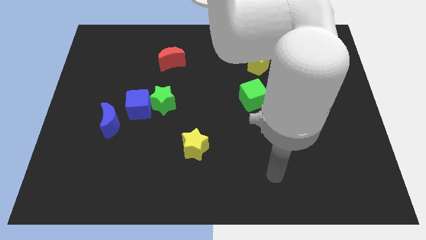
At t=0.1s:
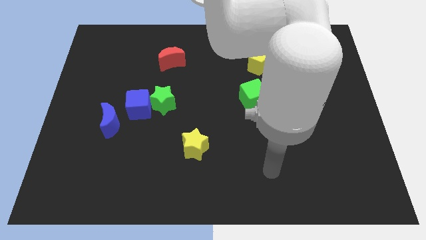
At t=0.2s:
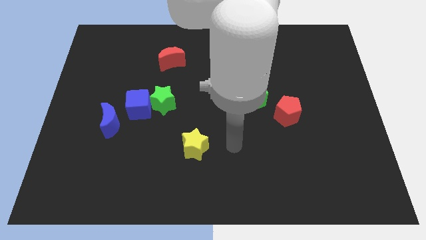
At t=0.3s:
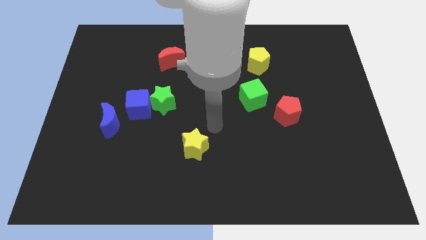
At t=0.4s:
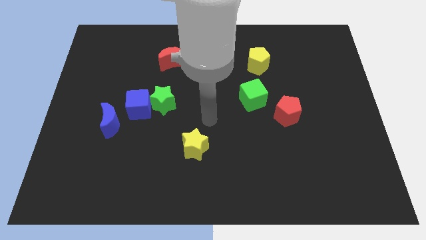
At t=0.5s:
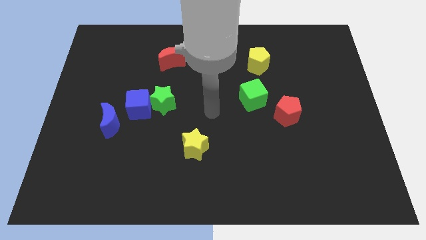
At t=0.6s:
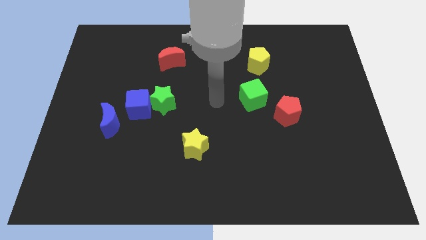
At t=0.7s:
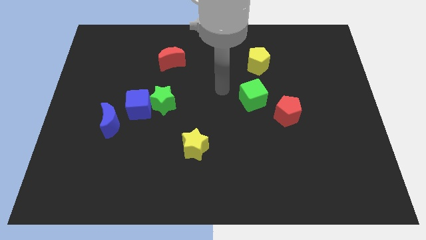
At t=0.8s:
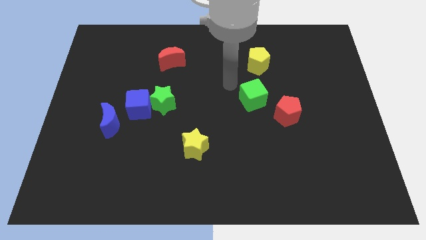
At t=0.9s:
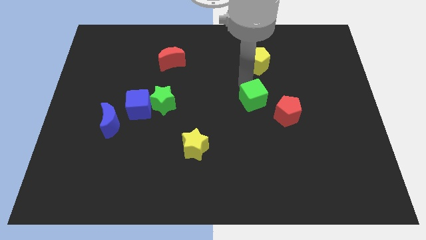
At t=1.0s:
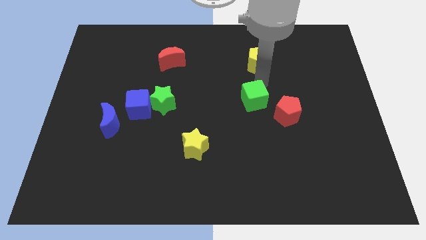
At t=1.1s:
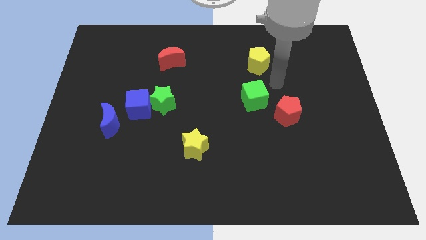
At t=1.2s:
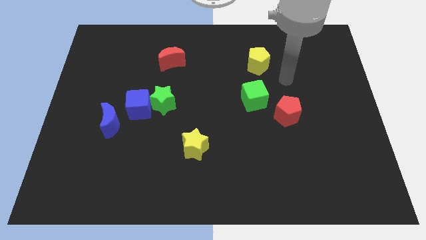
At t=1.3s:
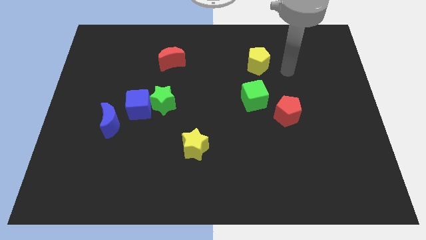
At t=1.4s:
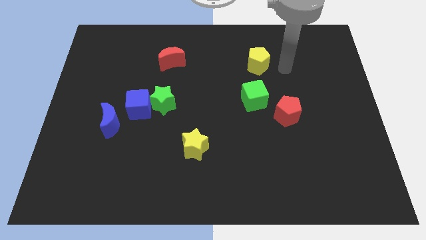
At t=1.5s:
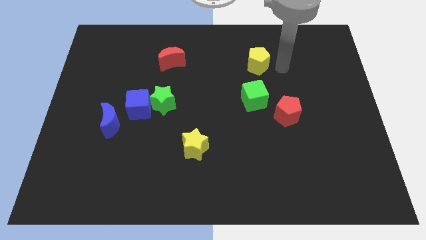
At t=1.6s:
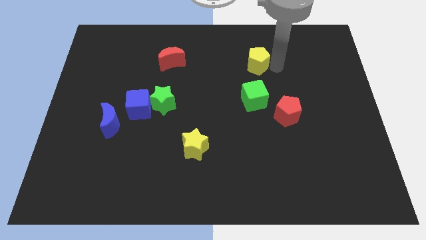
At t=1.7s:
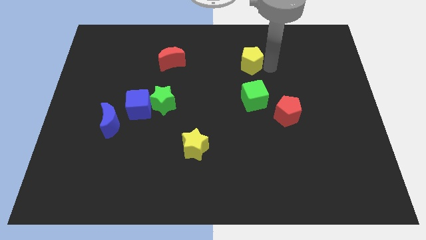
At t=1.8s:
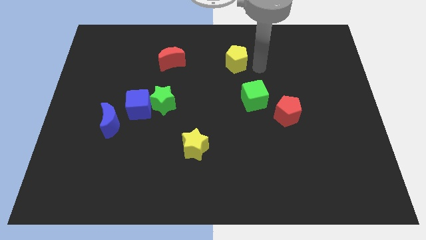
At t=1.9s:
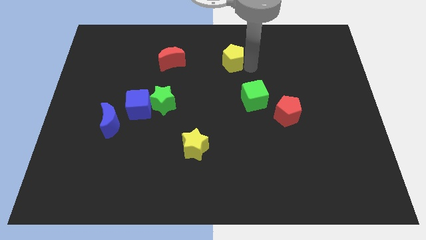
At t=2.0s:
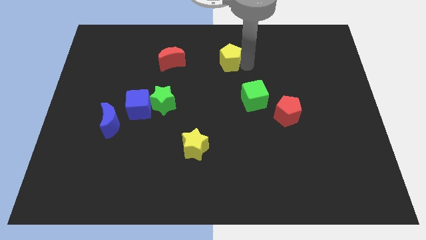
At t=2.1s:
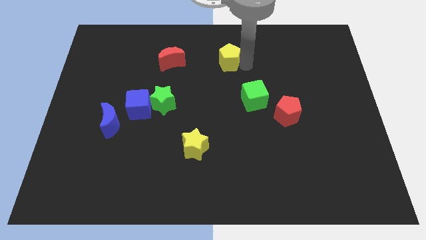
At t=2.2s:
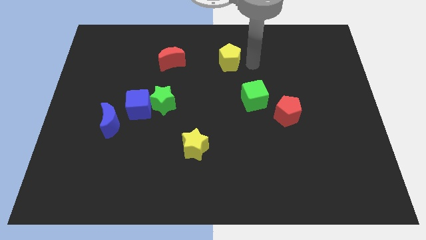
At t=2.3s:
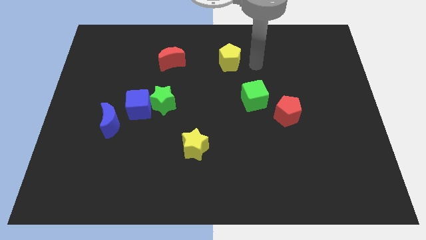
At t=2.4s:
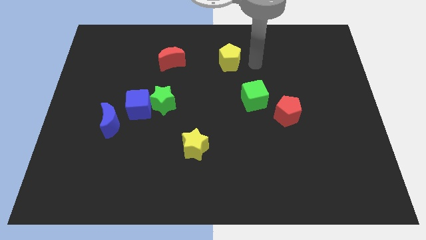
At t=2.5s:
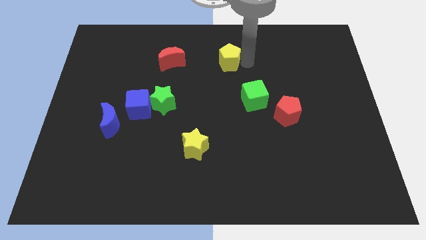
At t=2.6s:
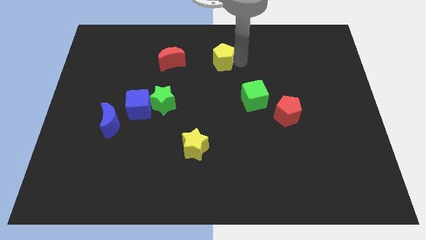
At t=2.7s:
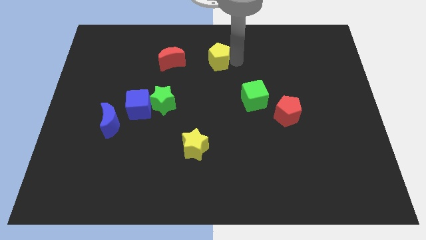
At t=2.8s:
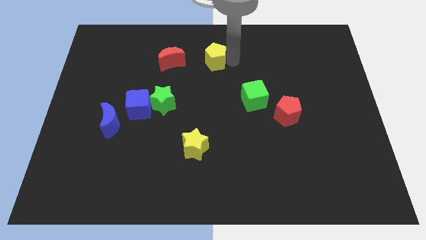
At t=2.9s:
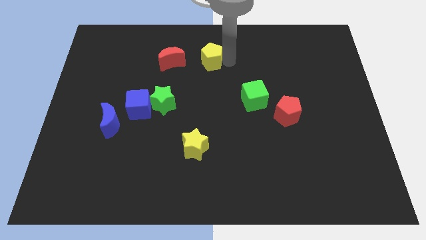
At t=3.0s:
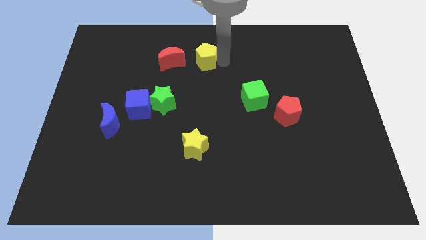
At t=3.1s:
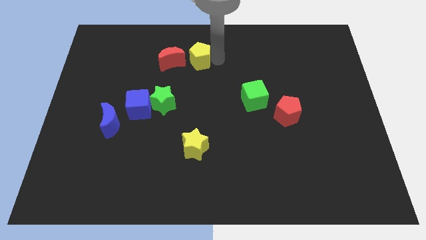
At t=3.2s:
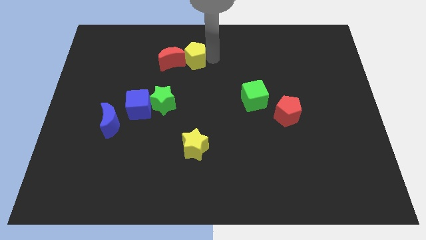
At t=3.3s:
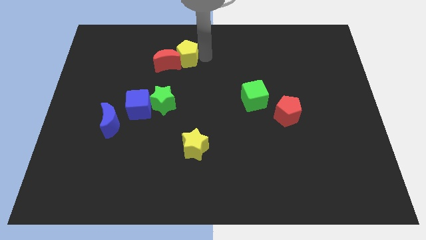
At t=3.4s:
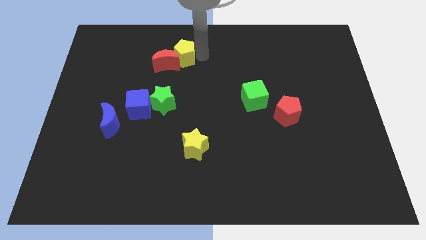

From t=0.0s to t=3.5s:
move the yellow pentagon towards the red moon

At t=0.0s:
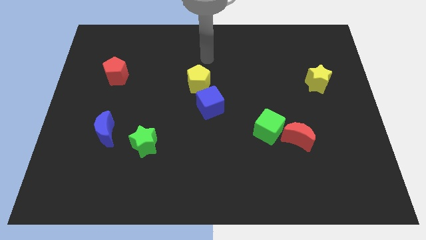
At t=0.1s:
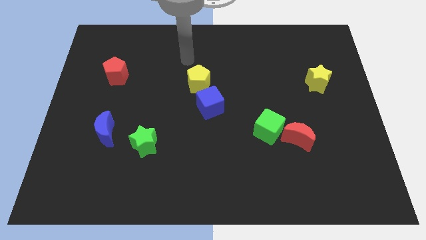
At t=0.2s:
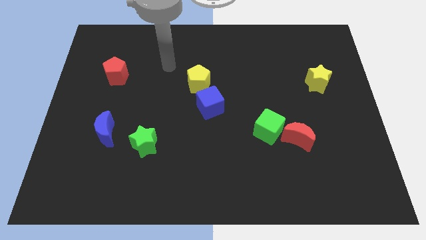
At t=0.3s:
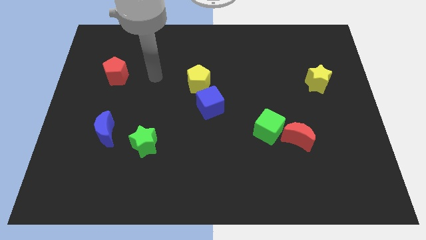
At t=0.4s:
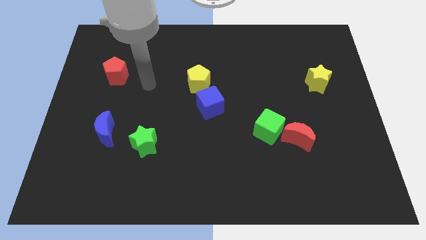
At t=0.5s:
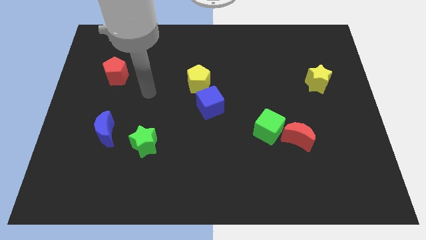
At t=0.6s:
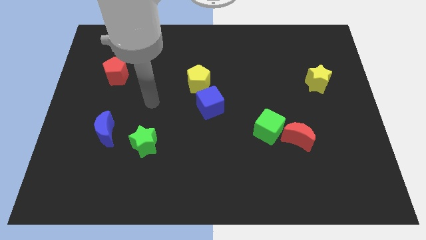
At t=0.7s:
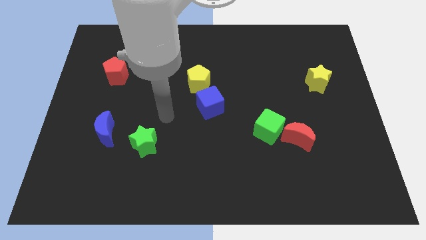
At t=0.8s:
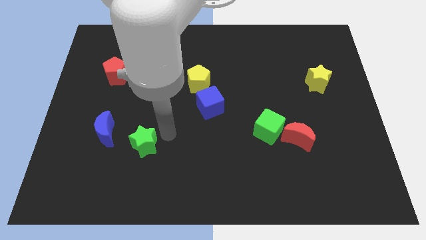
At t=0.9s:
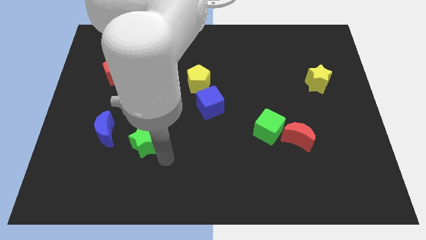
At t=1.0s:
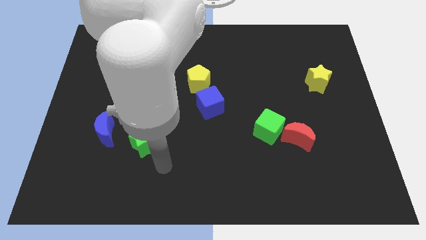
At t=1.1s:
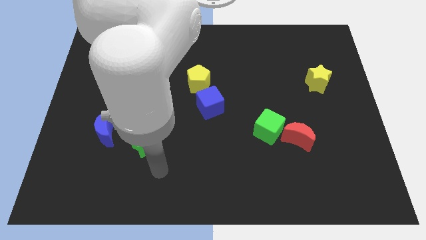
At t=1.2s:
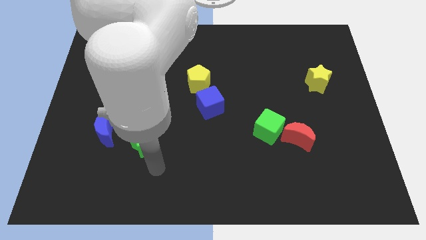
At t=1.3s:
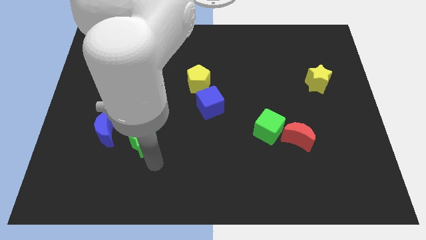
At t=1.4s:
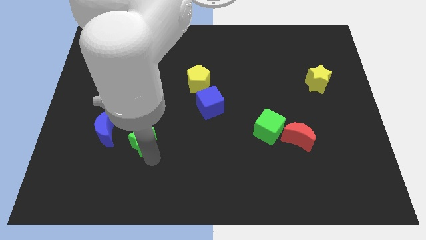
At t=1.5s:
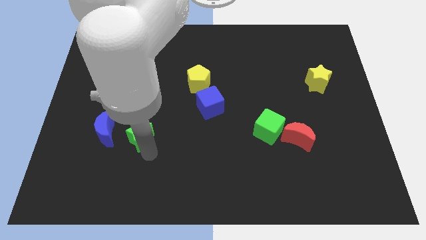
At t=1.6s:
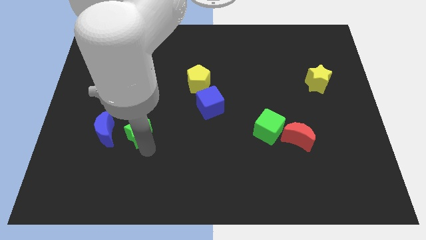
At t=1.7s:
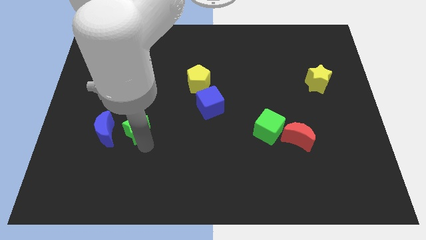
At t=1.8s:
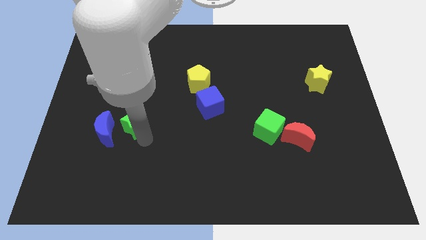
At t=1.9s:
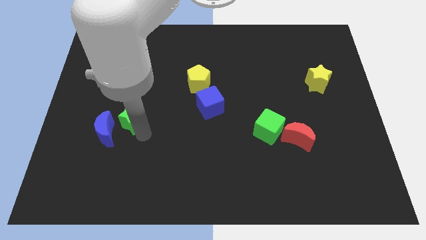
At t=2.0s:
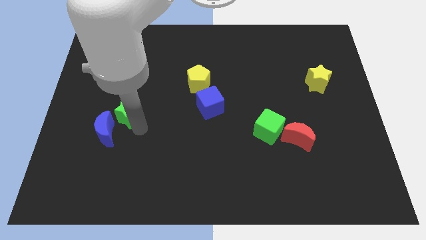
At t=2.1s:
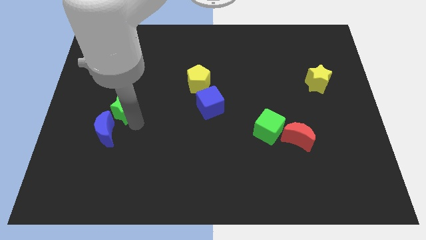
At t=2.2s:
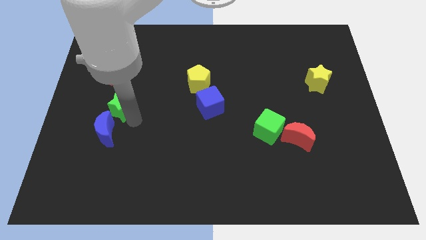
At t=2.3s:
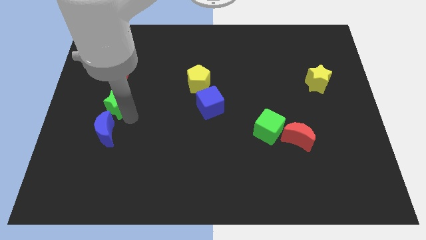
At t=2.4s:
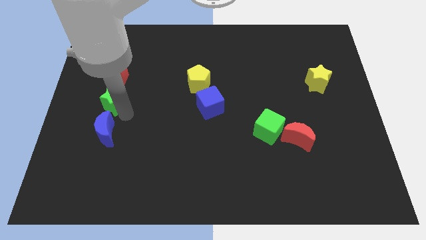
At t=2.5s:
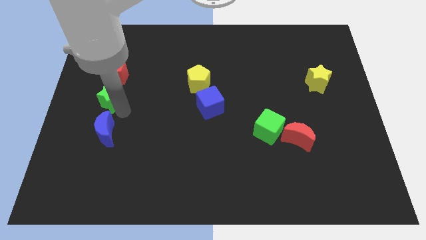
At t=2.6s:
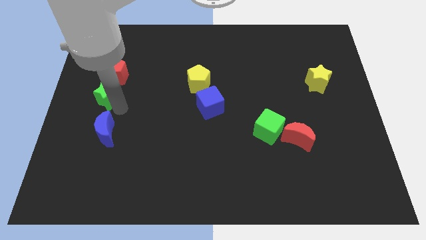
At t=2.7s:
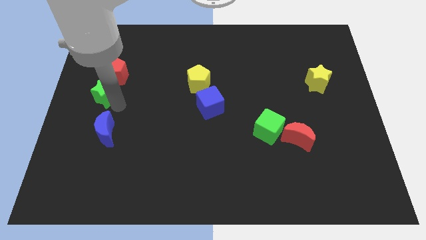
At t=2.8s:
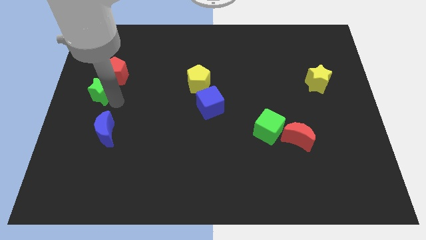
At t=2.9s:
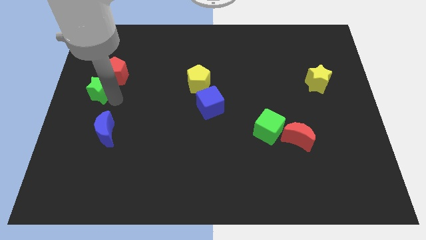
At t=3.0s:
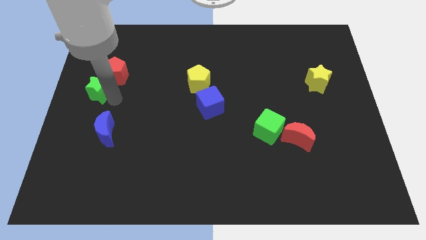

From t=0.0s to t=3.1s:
put the green star next to the red pentagon

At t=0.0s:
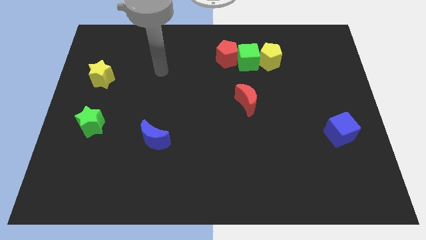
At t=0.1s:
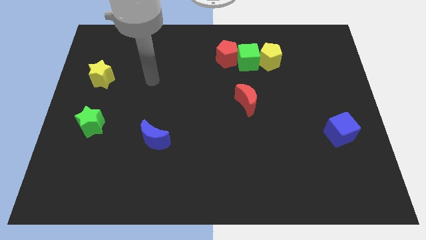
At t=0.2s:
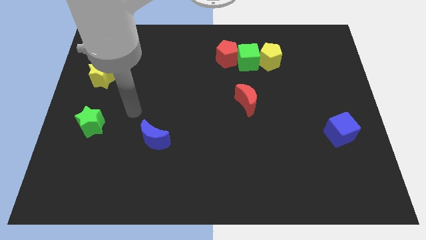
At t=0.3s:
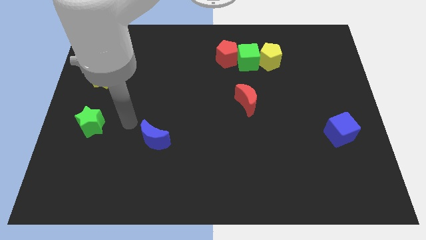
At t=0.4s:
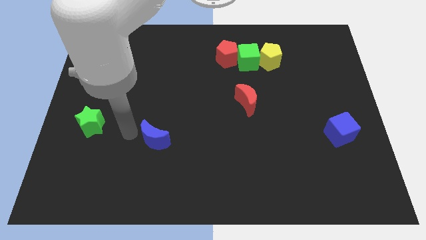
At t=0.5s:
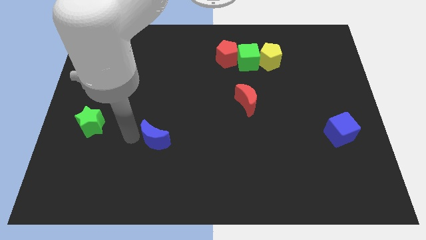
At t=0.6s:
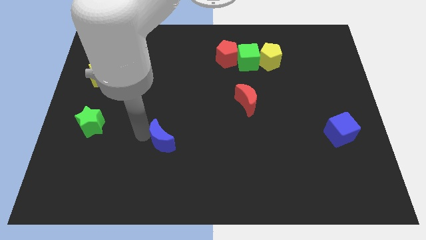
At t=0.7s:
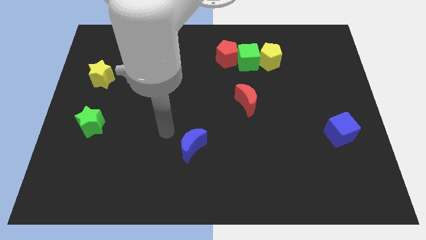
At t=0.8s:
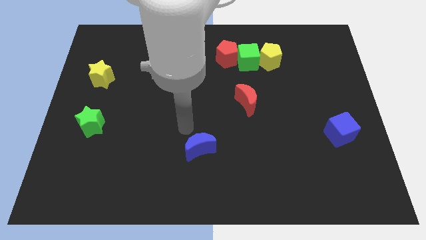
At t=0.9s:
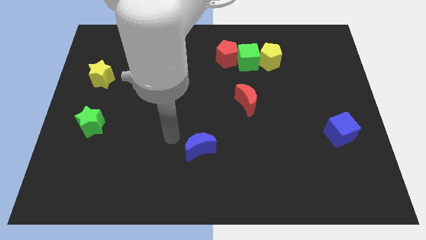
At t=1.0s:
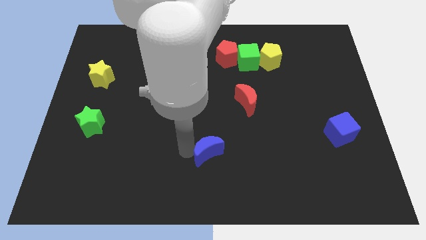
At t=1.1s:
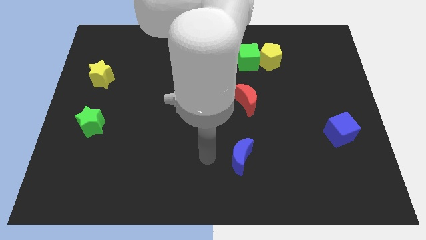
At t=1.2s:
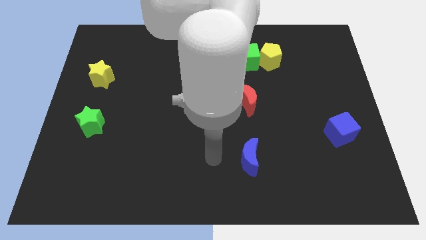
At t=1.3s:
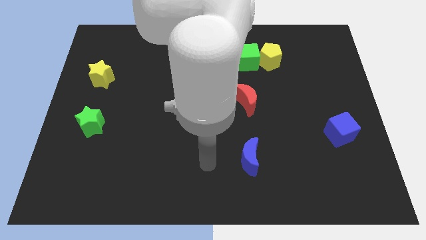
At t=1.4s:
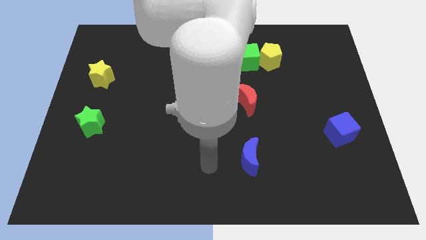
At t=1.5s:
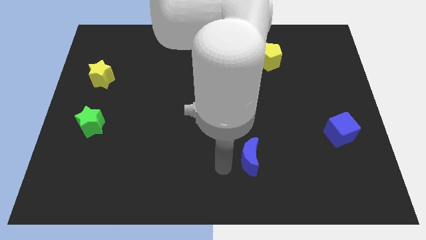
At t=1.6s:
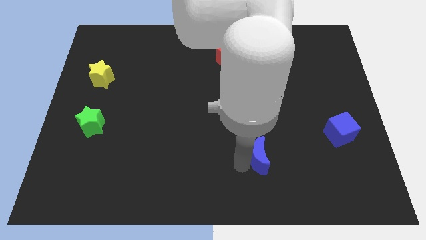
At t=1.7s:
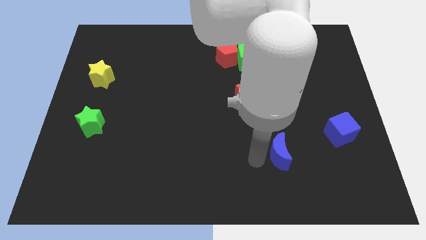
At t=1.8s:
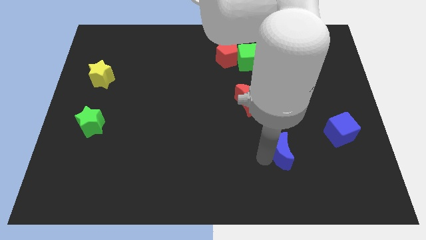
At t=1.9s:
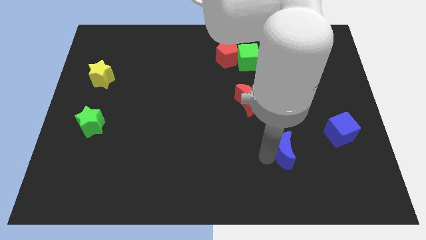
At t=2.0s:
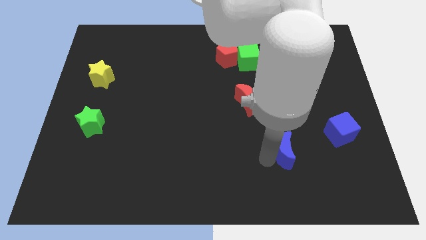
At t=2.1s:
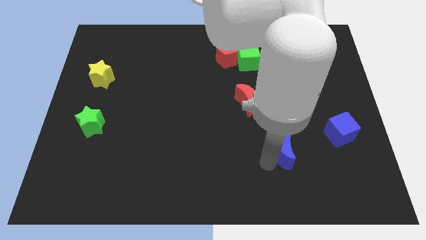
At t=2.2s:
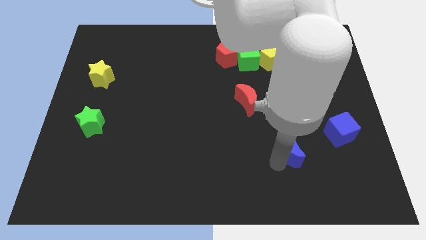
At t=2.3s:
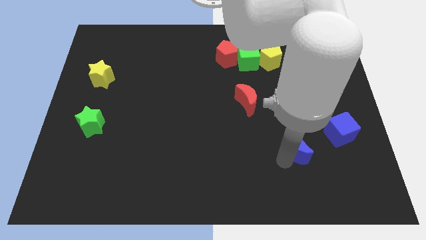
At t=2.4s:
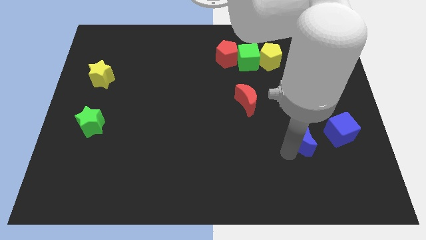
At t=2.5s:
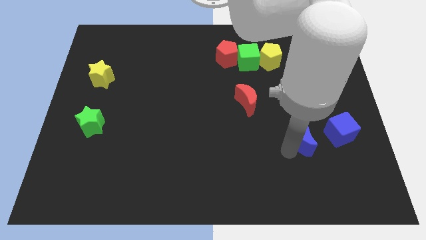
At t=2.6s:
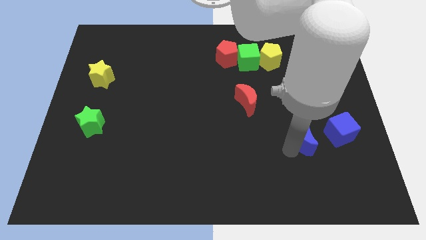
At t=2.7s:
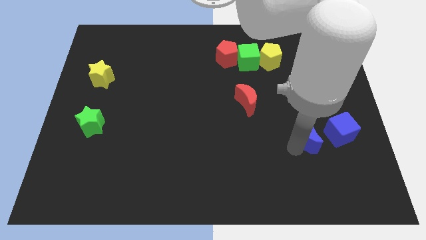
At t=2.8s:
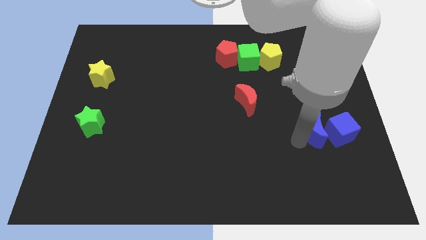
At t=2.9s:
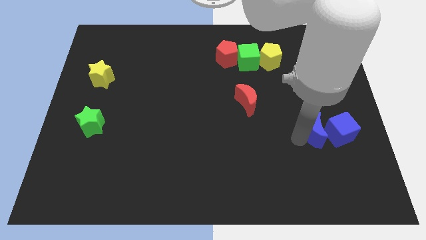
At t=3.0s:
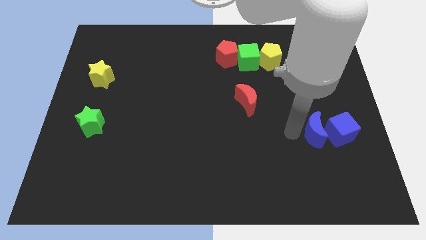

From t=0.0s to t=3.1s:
slide the blue moon next to the blue cube
